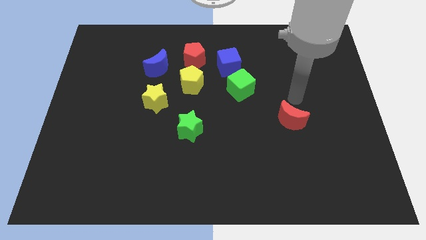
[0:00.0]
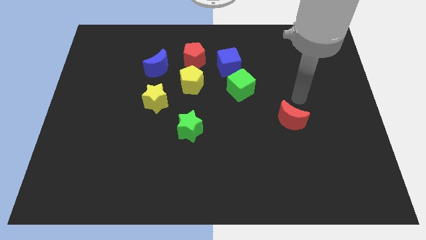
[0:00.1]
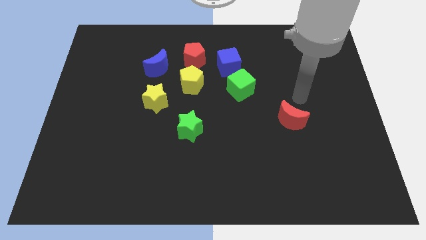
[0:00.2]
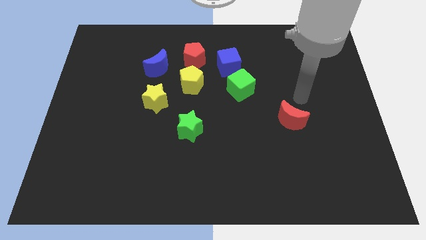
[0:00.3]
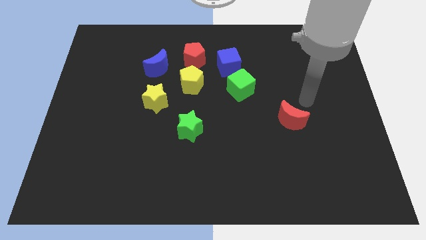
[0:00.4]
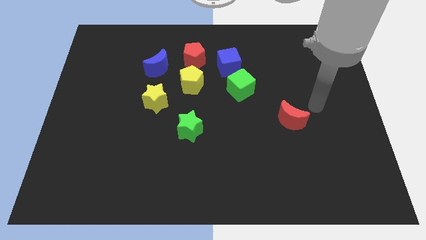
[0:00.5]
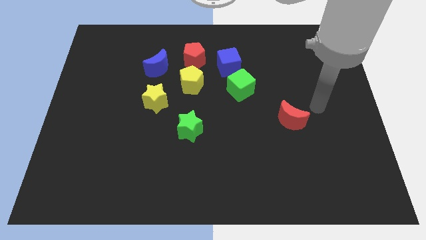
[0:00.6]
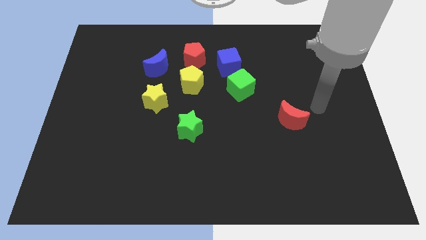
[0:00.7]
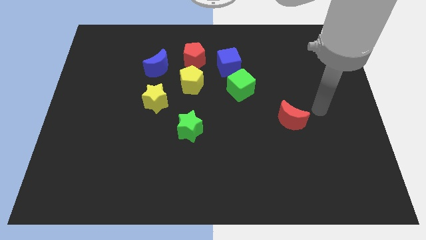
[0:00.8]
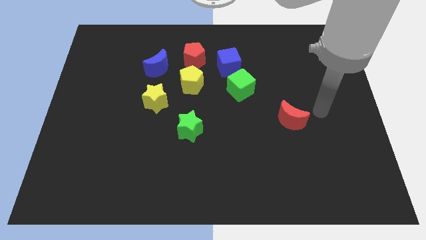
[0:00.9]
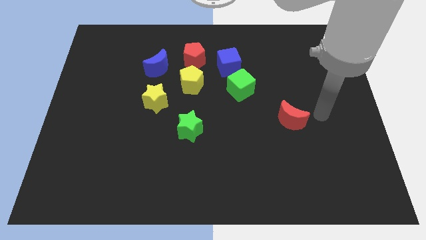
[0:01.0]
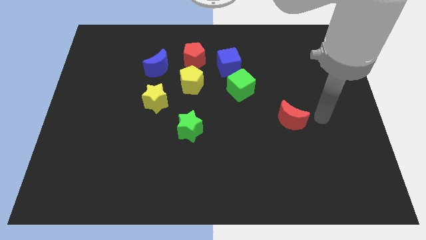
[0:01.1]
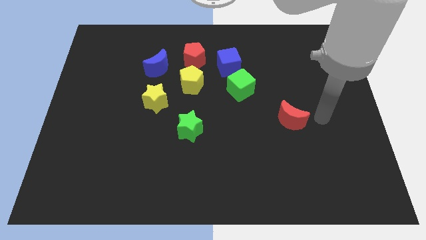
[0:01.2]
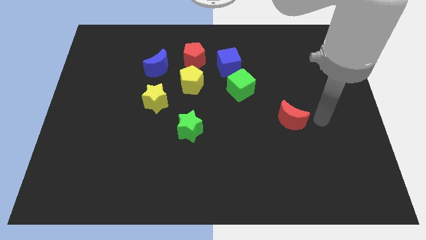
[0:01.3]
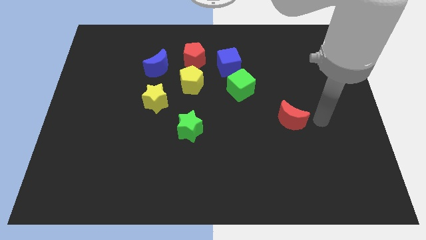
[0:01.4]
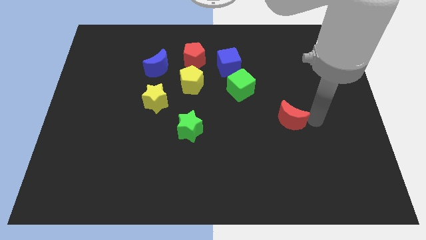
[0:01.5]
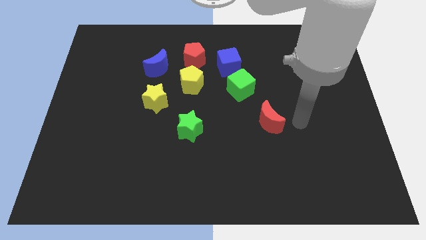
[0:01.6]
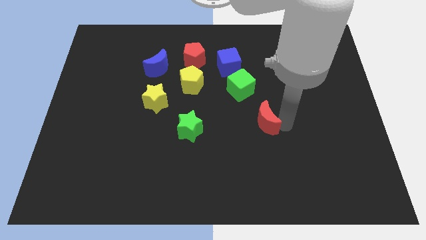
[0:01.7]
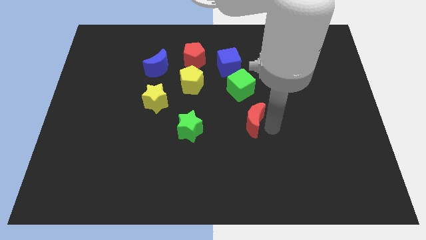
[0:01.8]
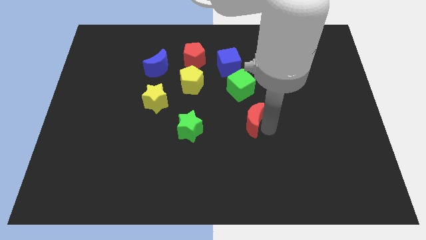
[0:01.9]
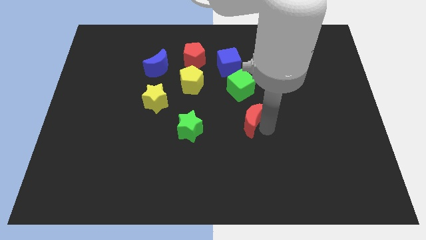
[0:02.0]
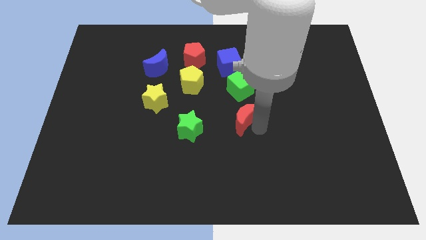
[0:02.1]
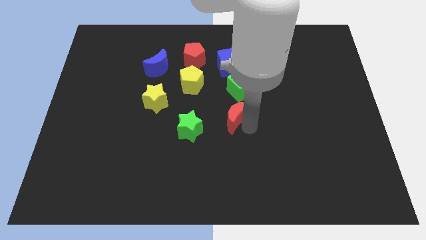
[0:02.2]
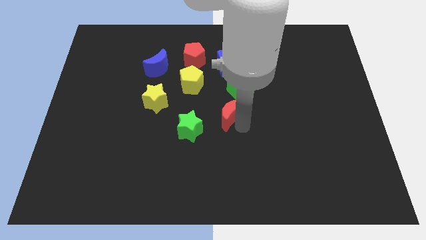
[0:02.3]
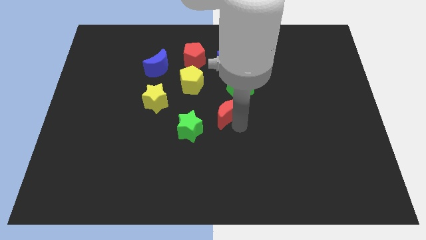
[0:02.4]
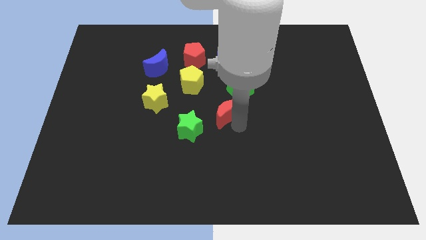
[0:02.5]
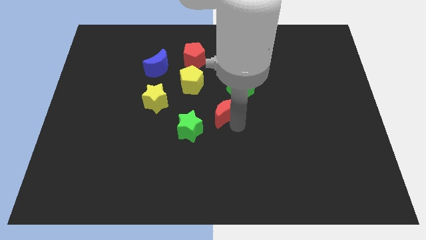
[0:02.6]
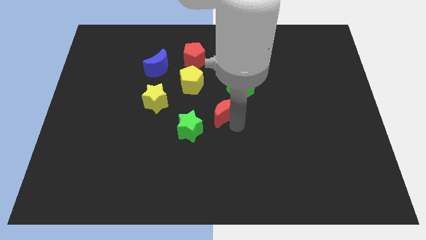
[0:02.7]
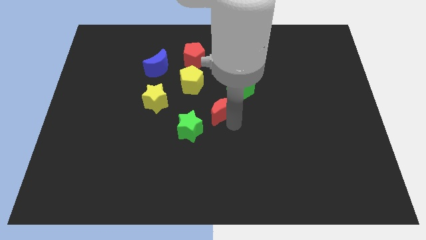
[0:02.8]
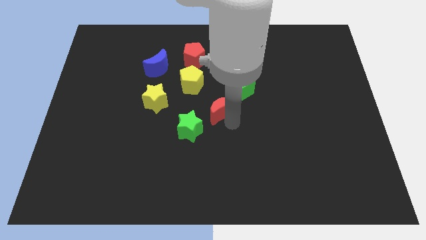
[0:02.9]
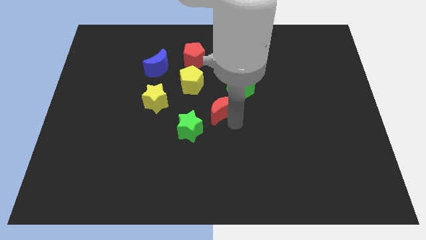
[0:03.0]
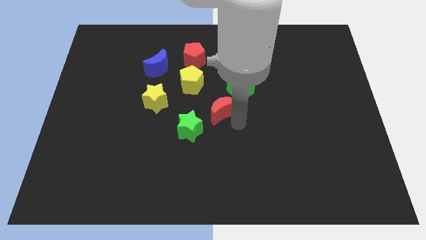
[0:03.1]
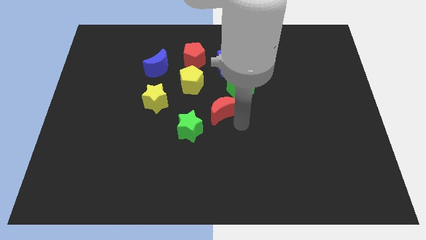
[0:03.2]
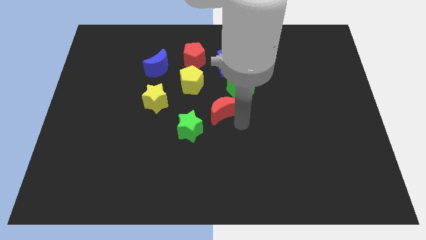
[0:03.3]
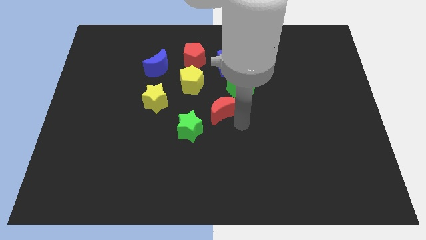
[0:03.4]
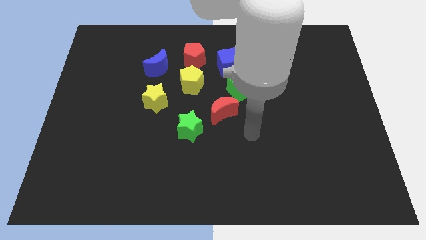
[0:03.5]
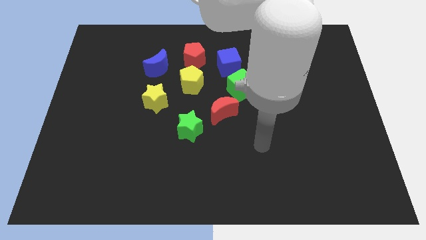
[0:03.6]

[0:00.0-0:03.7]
move the red crescent diagonally to the bottom right side of the yellow pentagon

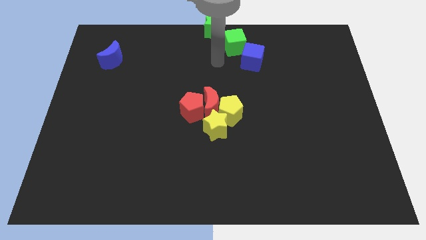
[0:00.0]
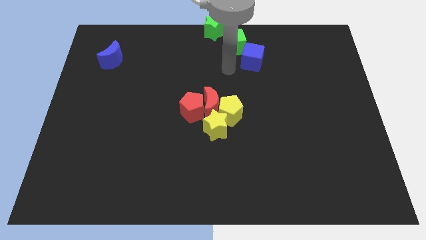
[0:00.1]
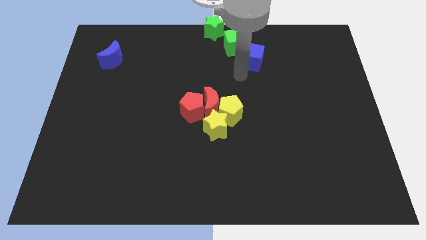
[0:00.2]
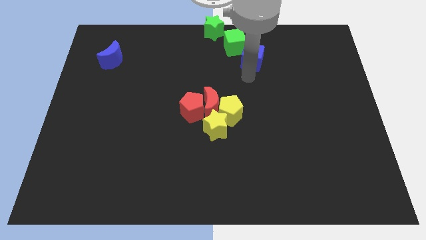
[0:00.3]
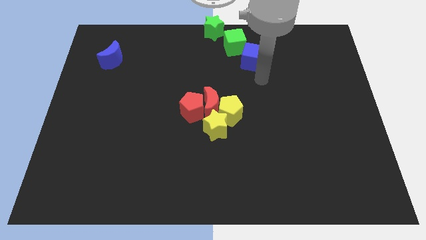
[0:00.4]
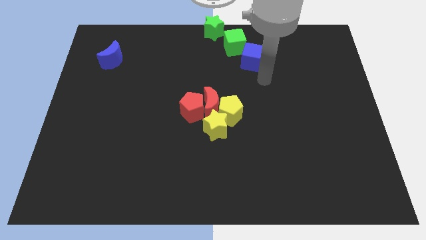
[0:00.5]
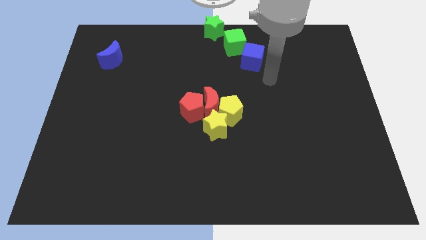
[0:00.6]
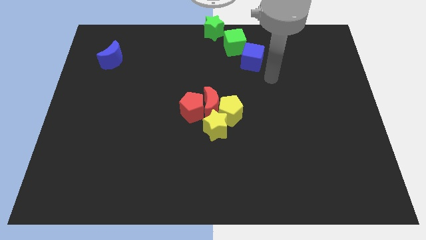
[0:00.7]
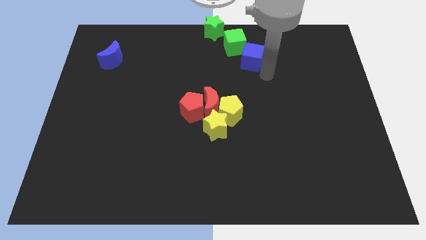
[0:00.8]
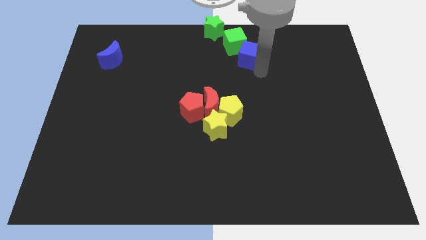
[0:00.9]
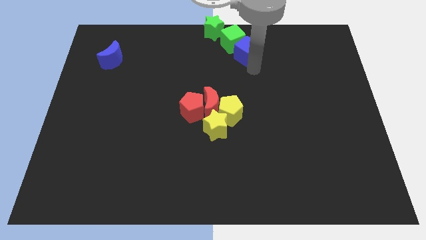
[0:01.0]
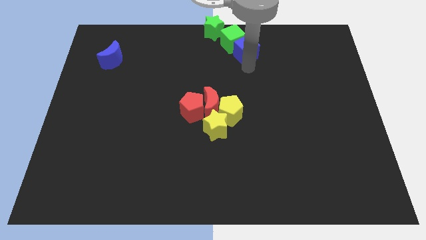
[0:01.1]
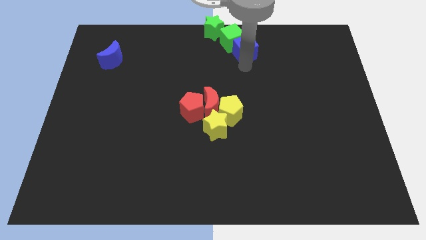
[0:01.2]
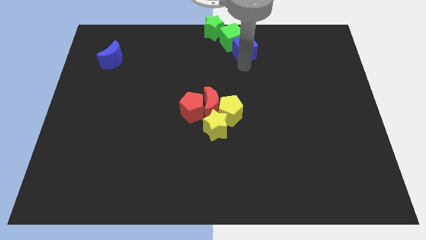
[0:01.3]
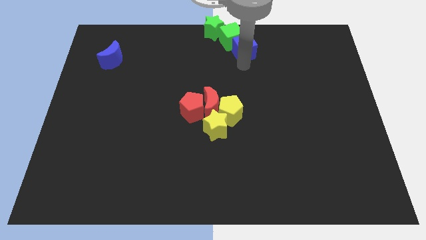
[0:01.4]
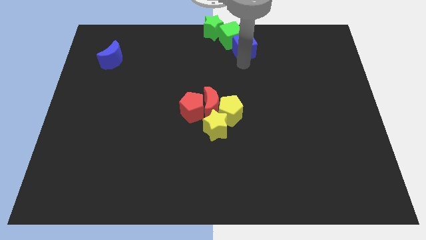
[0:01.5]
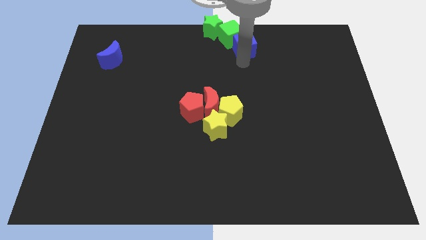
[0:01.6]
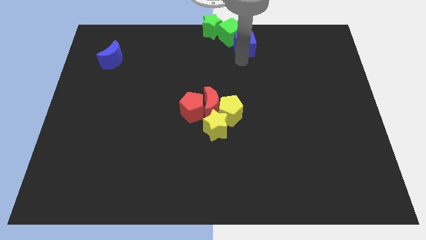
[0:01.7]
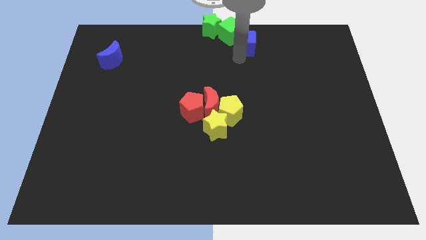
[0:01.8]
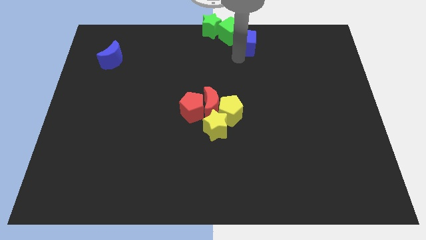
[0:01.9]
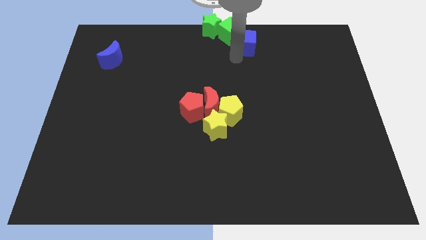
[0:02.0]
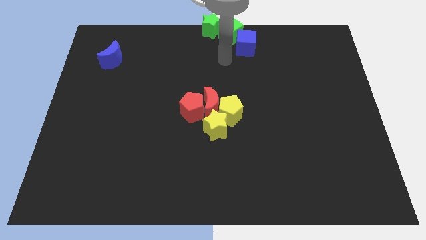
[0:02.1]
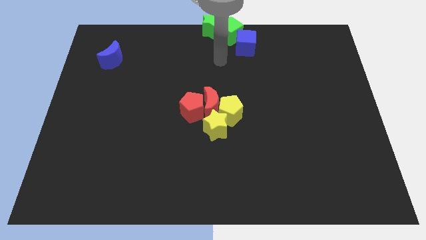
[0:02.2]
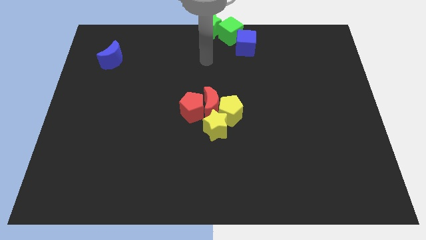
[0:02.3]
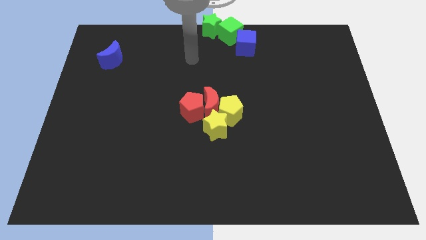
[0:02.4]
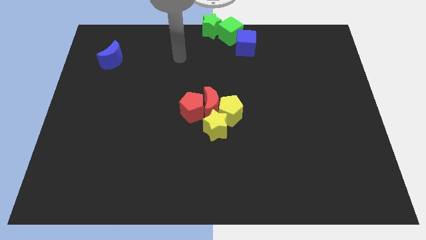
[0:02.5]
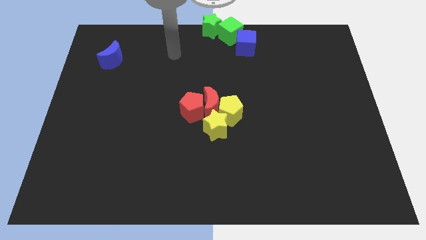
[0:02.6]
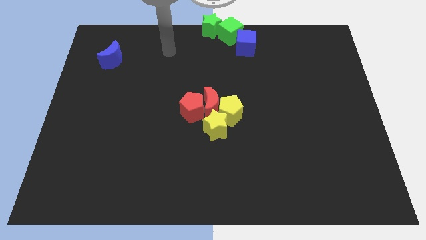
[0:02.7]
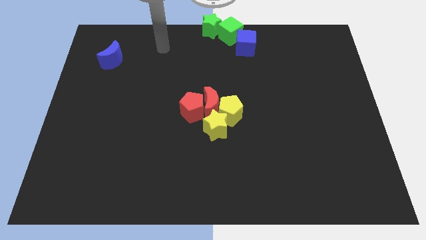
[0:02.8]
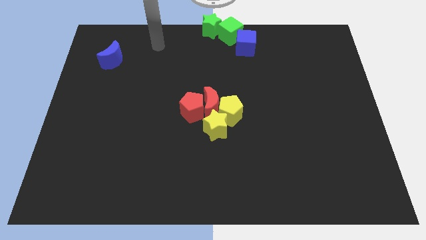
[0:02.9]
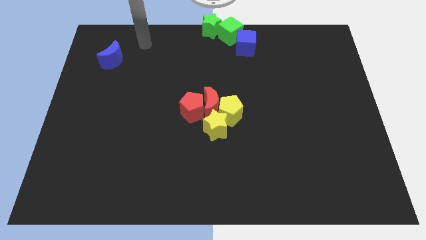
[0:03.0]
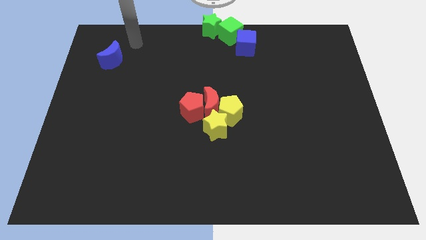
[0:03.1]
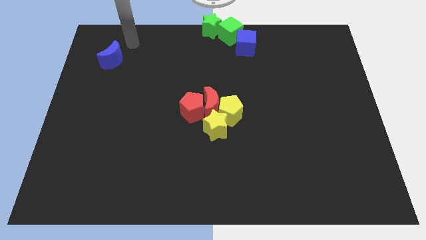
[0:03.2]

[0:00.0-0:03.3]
move both the cubes right below the green star

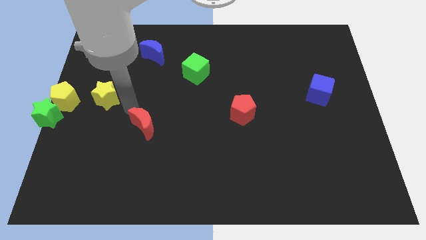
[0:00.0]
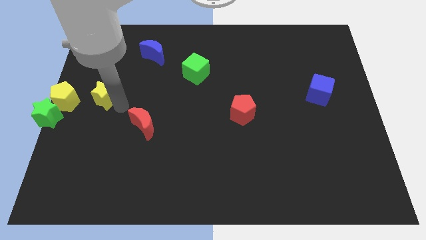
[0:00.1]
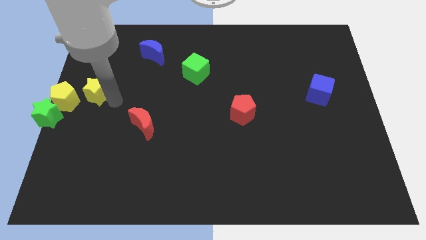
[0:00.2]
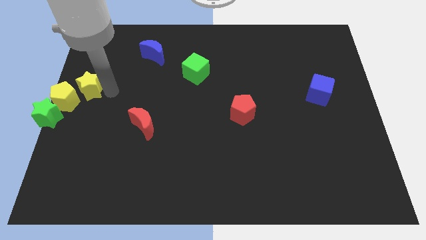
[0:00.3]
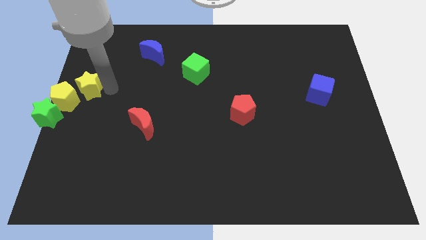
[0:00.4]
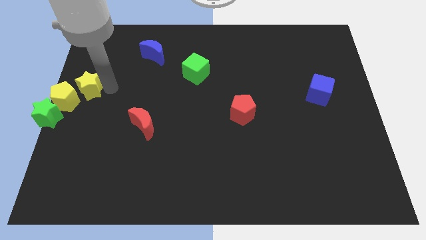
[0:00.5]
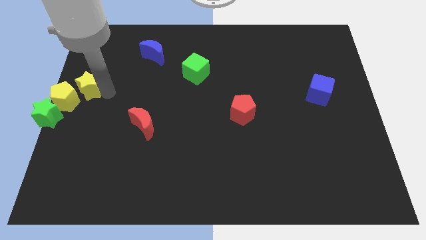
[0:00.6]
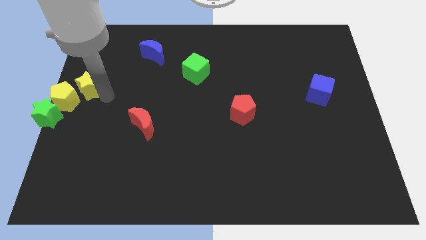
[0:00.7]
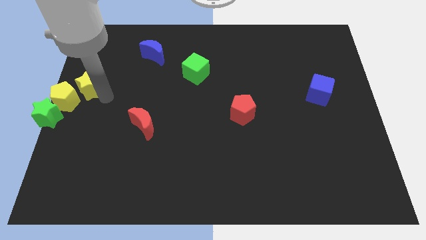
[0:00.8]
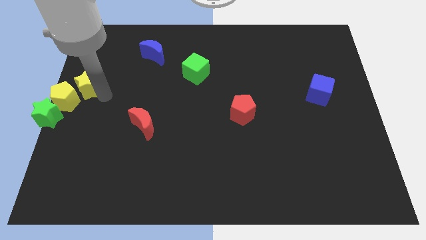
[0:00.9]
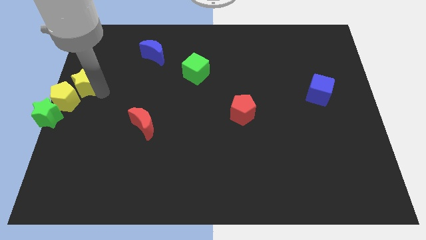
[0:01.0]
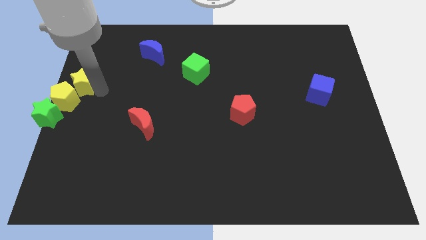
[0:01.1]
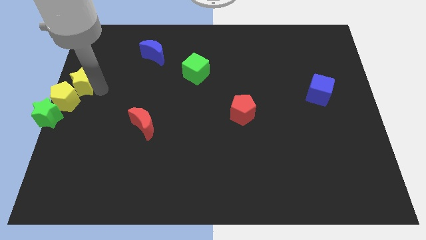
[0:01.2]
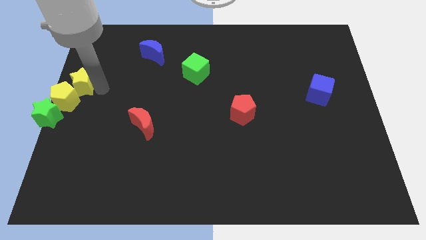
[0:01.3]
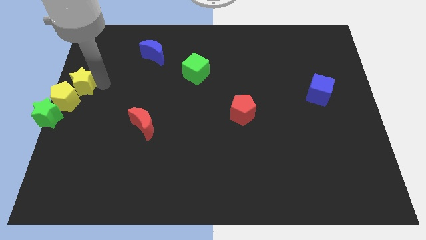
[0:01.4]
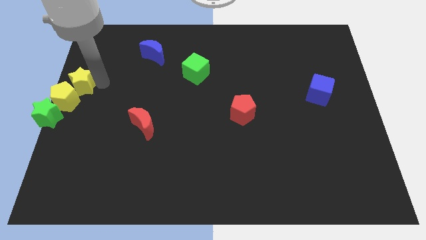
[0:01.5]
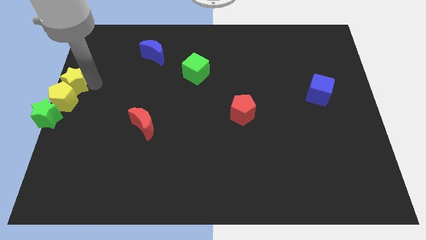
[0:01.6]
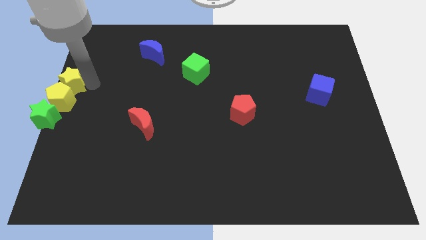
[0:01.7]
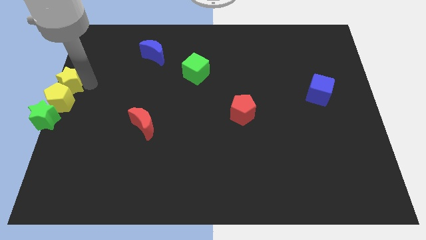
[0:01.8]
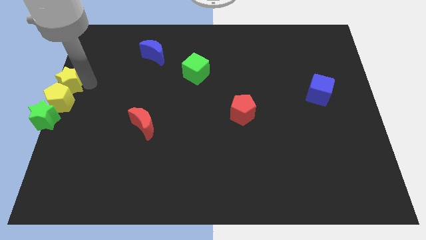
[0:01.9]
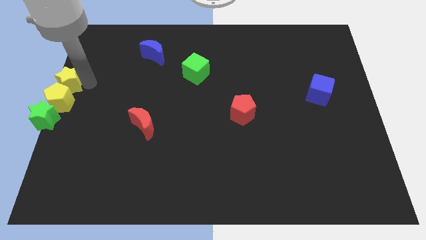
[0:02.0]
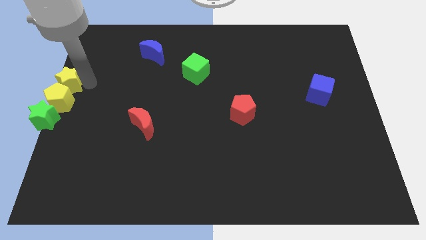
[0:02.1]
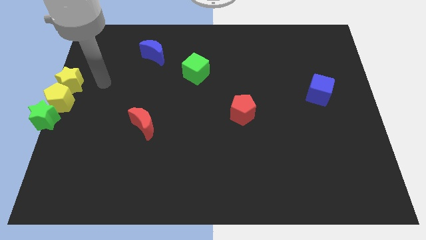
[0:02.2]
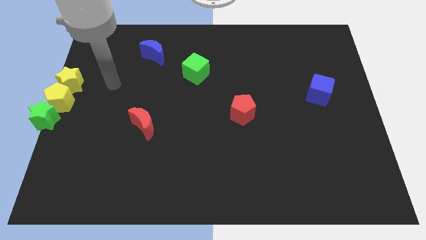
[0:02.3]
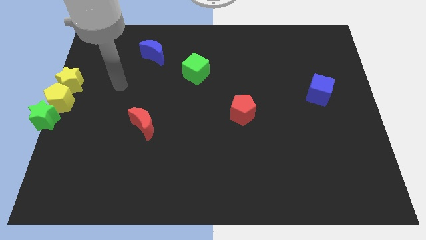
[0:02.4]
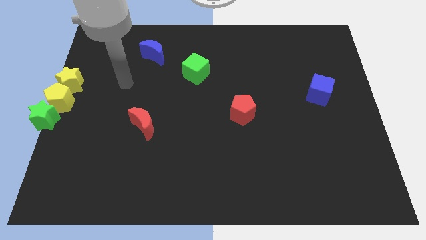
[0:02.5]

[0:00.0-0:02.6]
push the yellow star into the yellow pentagon
